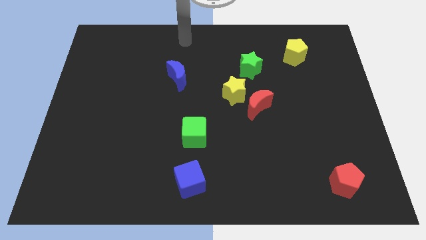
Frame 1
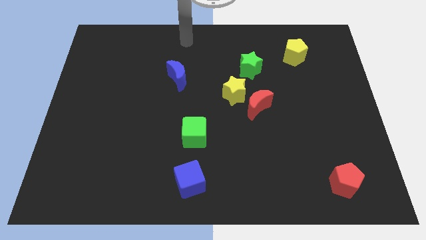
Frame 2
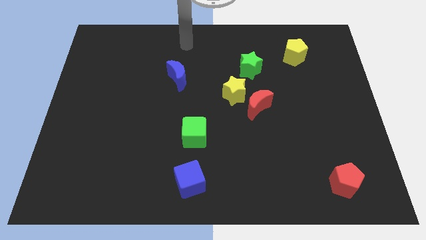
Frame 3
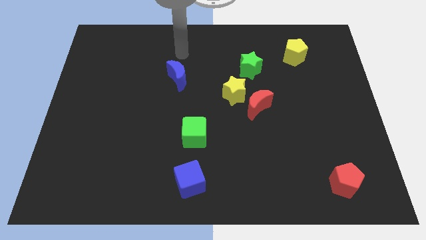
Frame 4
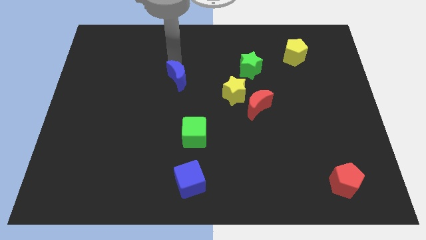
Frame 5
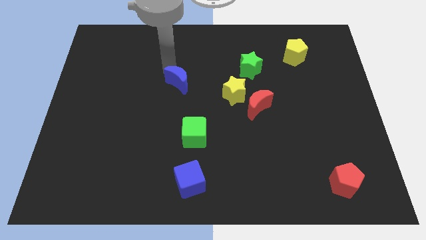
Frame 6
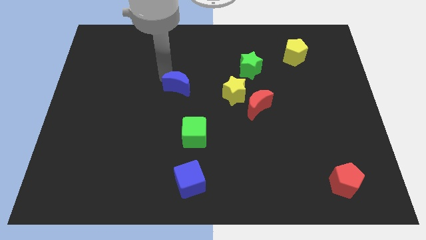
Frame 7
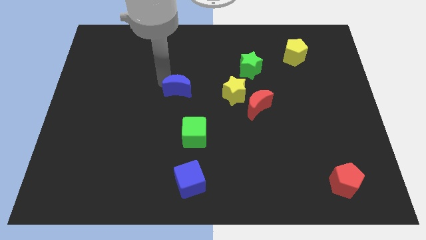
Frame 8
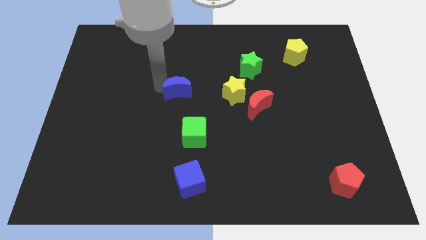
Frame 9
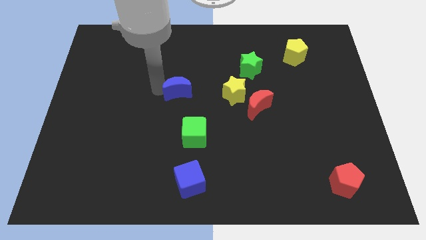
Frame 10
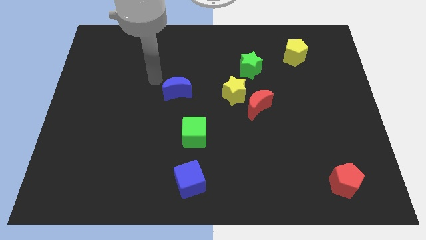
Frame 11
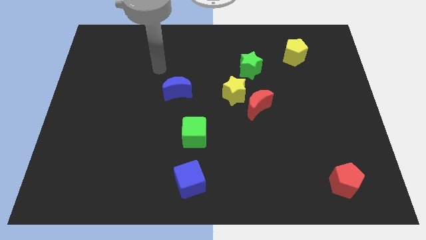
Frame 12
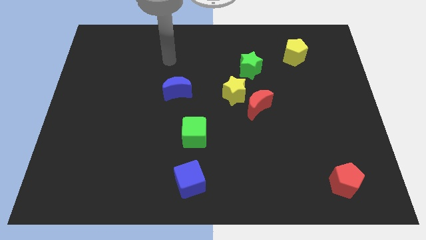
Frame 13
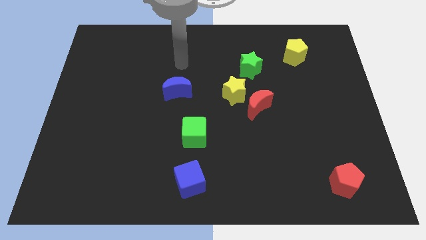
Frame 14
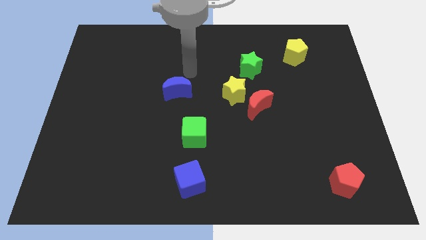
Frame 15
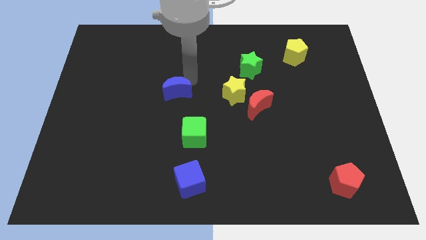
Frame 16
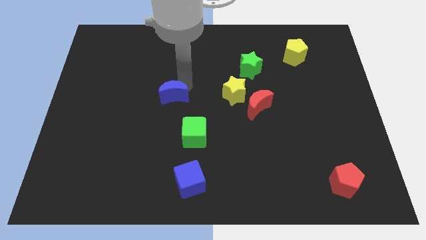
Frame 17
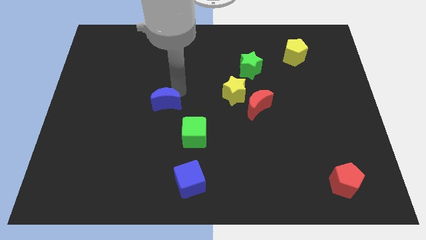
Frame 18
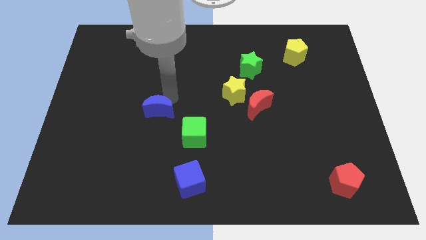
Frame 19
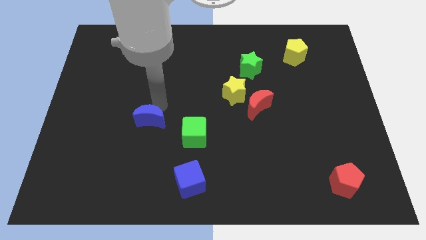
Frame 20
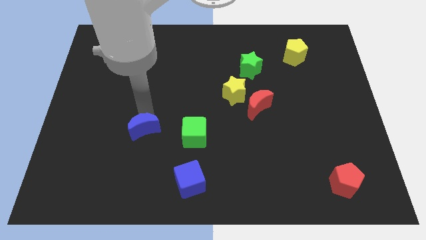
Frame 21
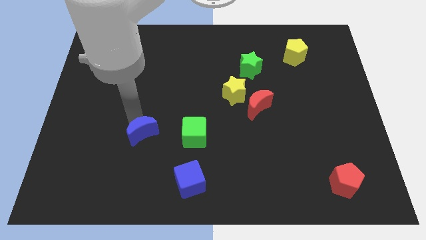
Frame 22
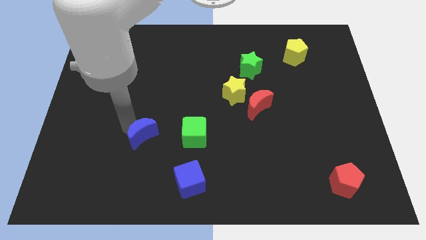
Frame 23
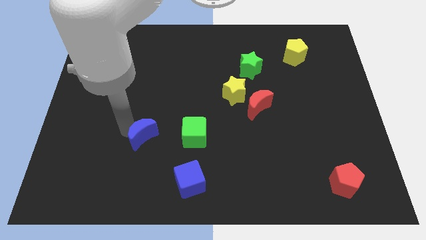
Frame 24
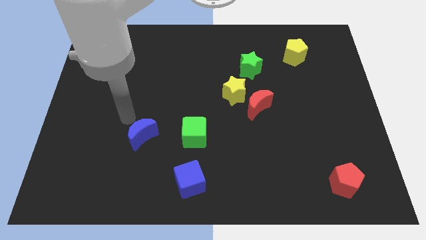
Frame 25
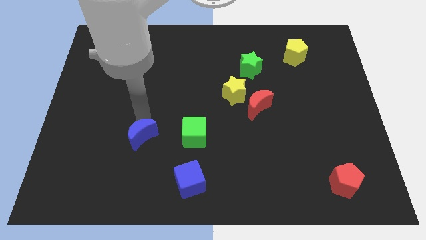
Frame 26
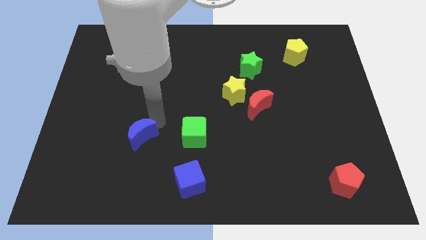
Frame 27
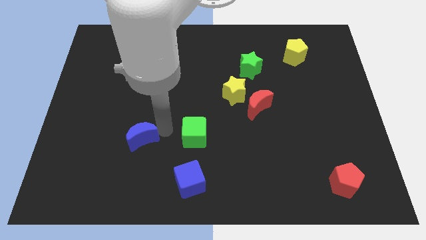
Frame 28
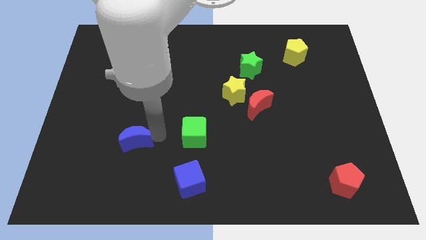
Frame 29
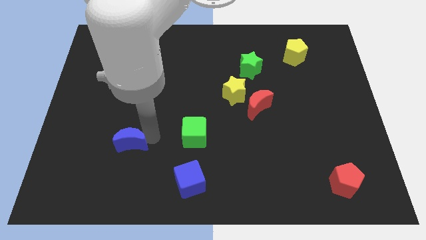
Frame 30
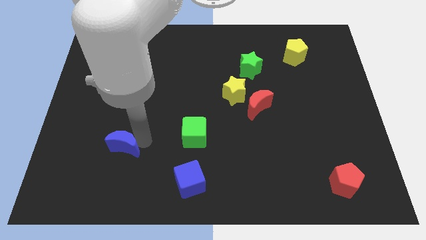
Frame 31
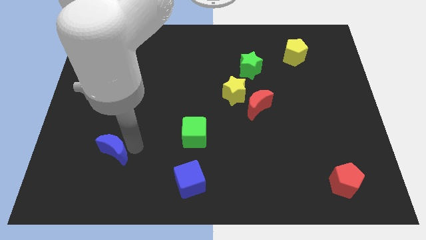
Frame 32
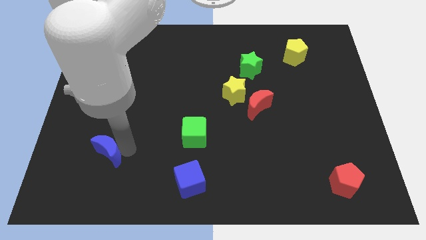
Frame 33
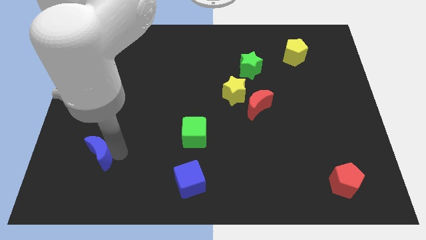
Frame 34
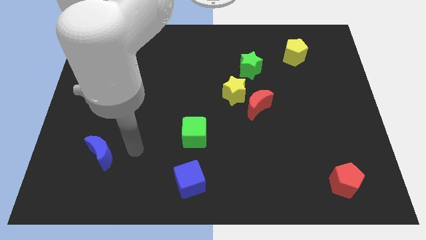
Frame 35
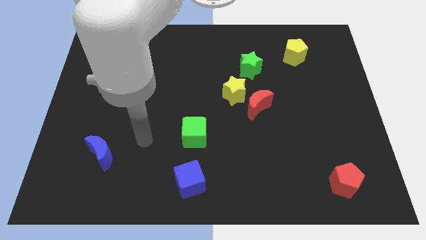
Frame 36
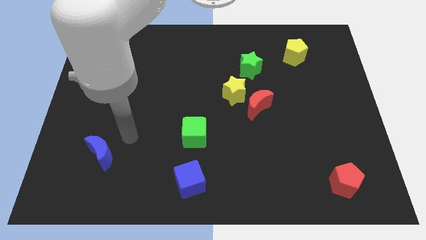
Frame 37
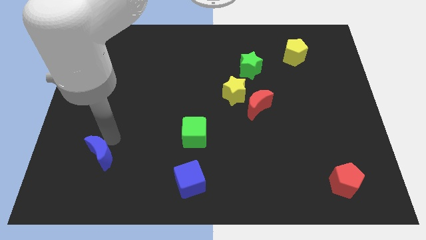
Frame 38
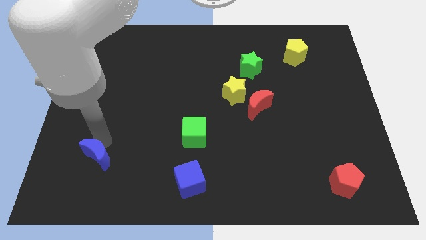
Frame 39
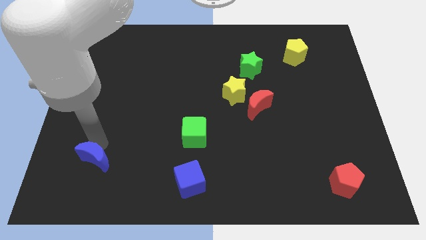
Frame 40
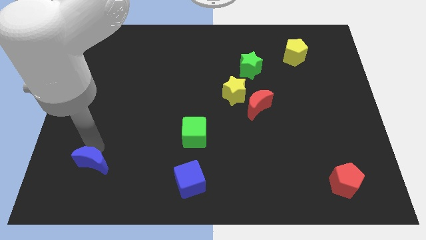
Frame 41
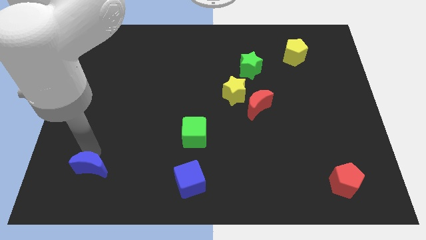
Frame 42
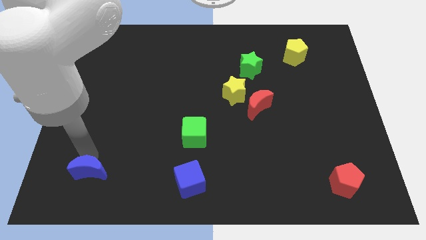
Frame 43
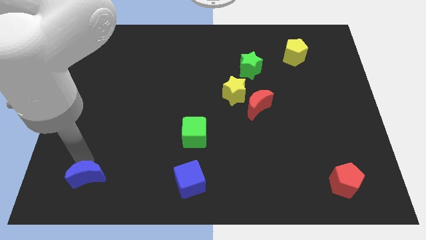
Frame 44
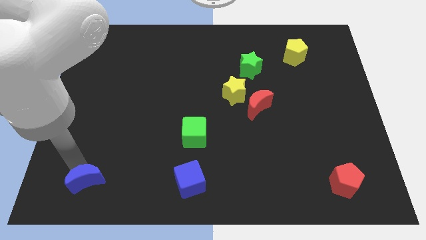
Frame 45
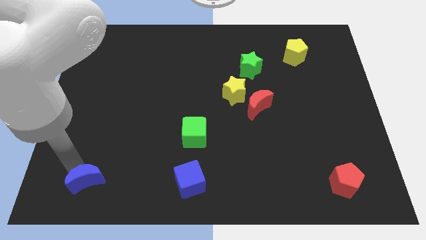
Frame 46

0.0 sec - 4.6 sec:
move the blue crescent to the left of the blue cube

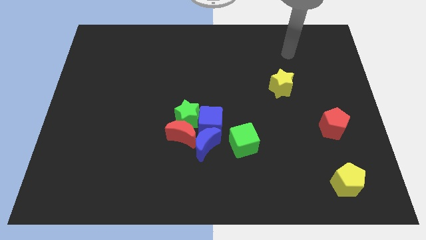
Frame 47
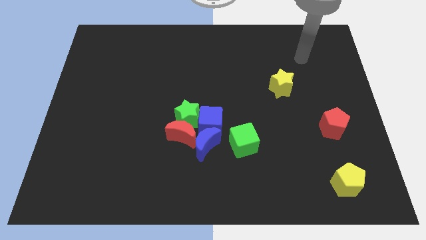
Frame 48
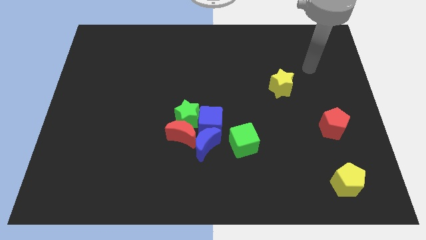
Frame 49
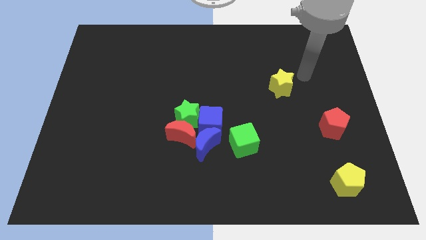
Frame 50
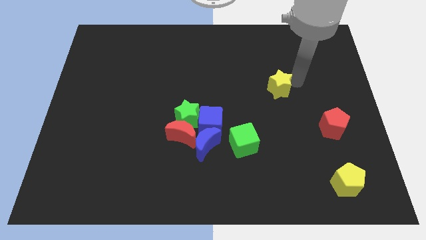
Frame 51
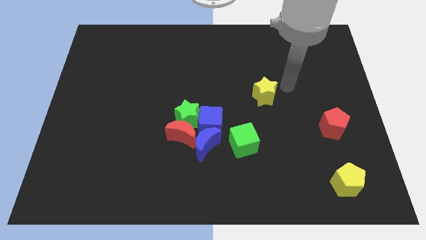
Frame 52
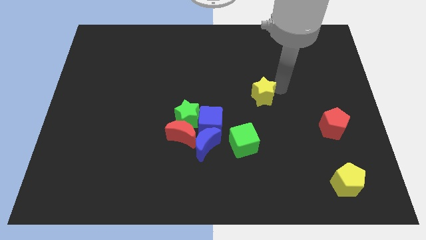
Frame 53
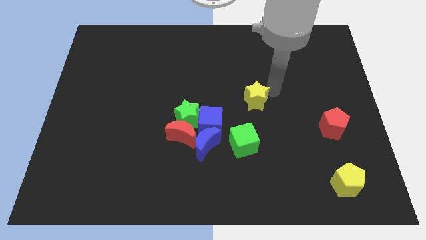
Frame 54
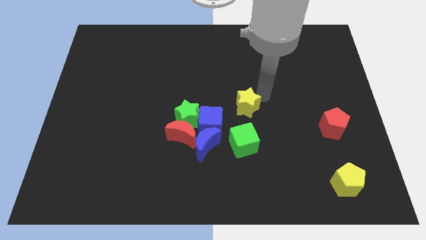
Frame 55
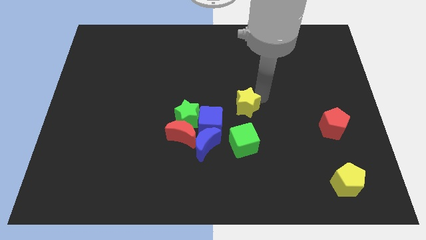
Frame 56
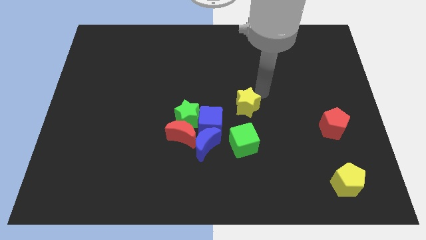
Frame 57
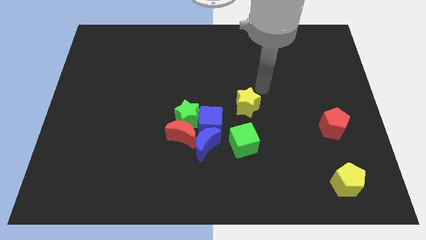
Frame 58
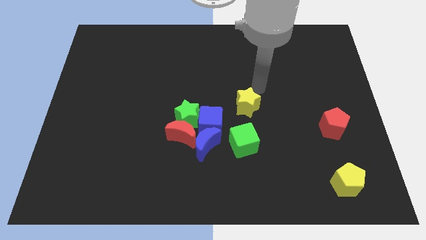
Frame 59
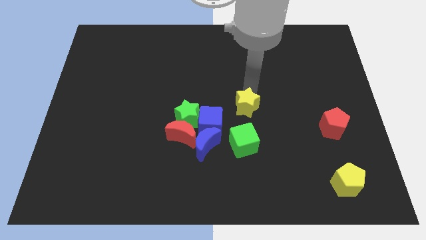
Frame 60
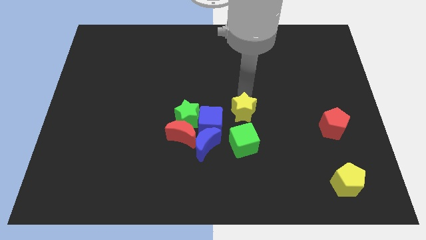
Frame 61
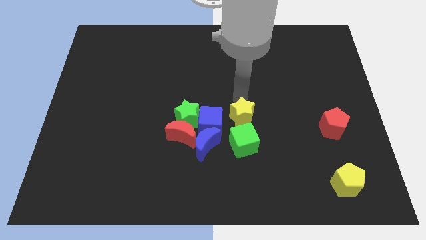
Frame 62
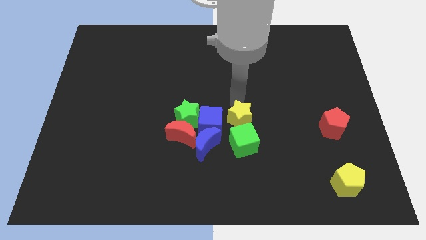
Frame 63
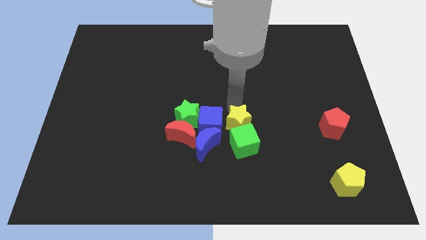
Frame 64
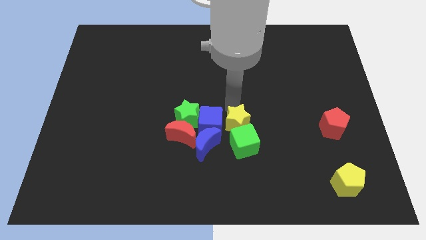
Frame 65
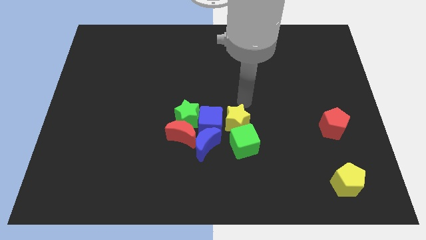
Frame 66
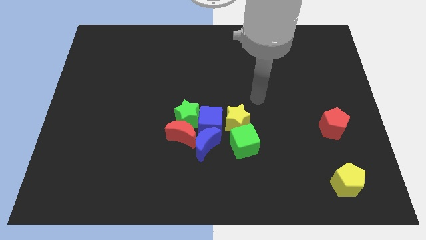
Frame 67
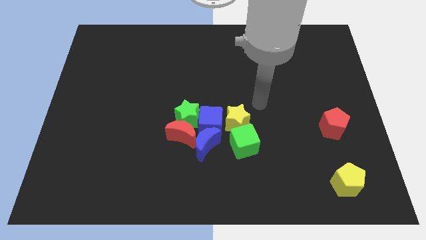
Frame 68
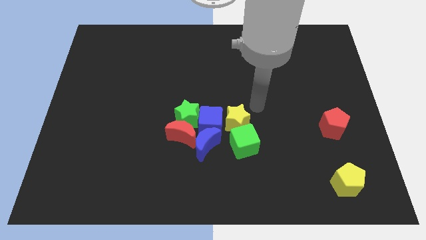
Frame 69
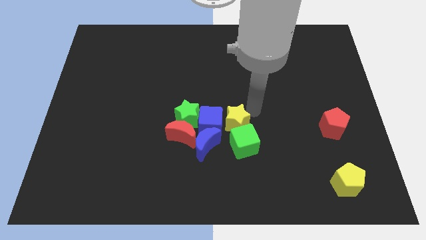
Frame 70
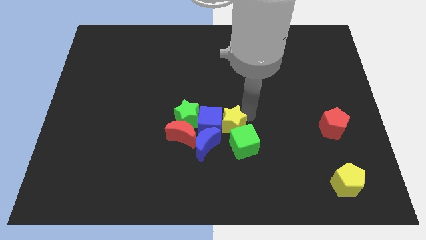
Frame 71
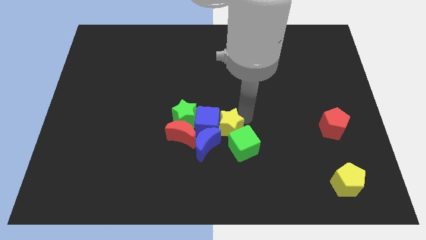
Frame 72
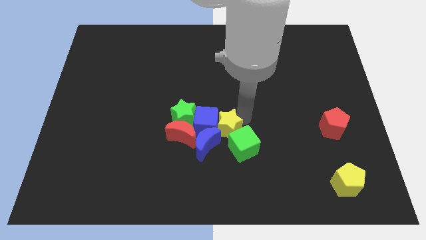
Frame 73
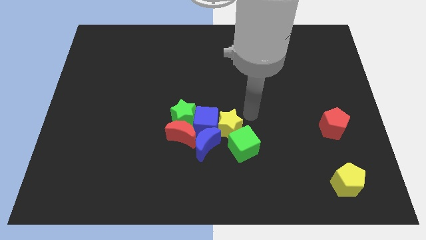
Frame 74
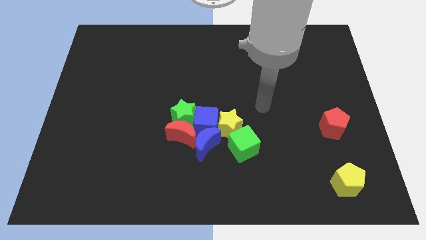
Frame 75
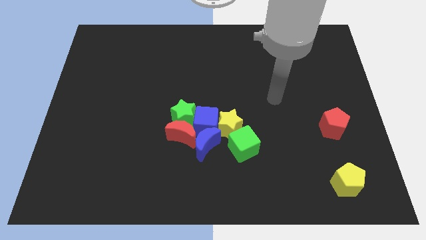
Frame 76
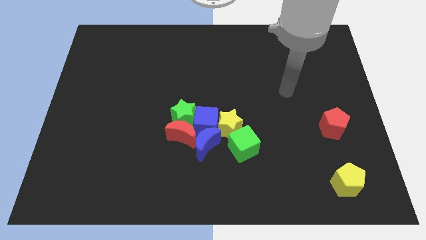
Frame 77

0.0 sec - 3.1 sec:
push the yellow star down into green cube

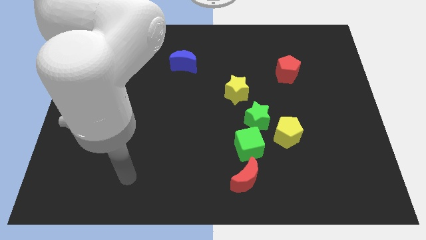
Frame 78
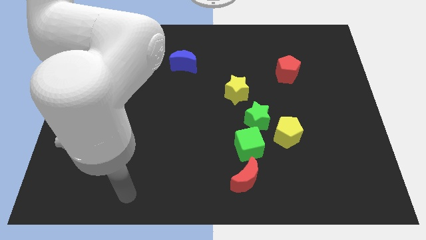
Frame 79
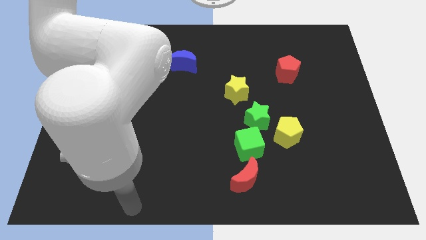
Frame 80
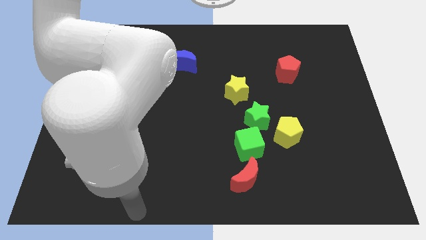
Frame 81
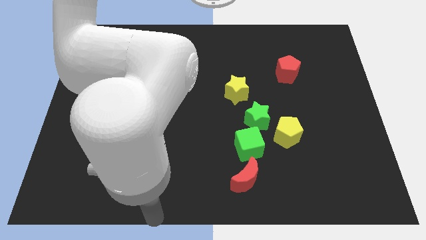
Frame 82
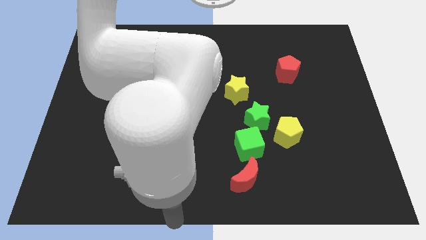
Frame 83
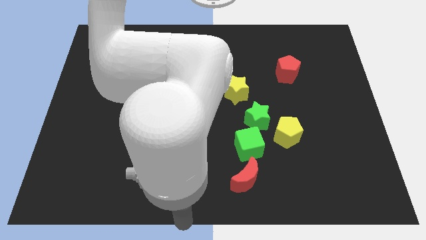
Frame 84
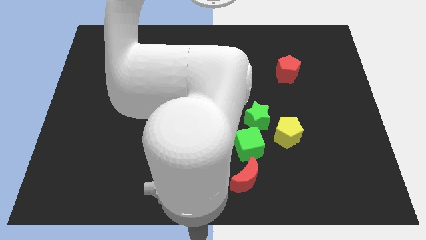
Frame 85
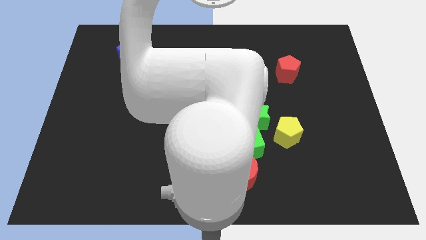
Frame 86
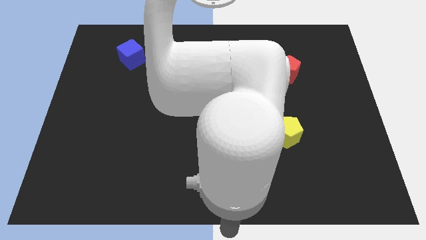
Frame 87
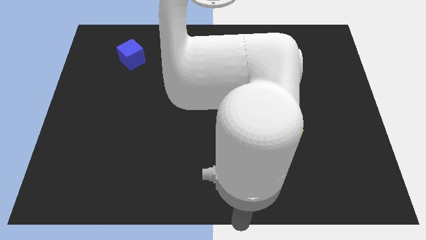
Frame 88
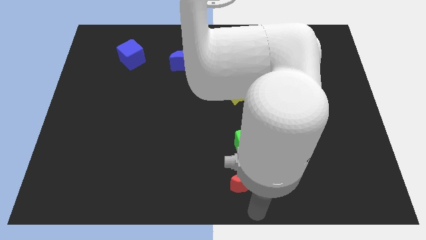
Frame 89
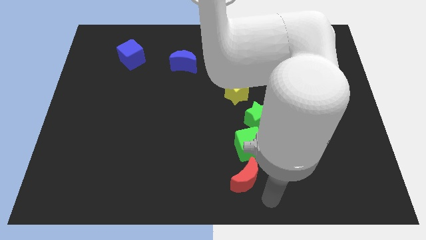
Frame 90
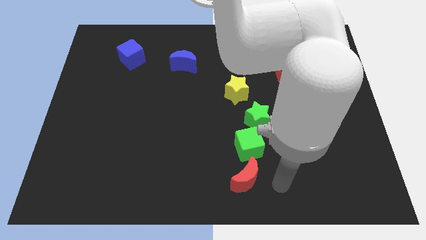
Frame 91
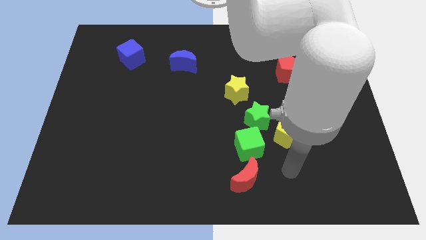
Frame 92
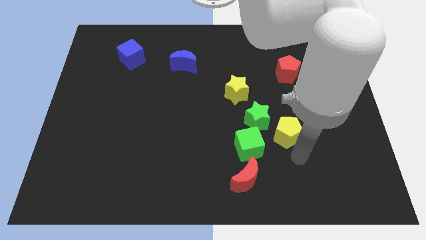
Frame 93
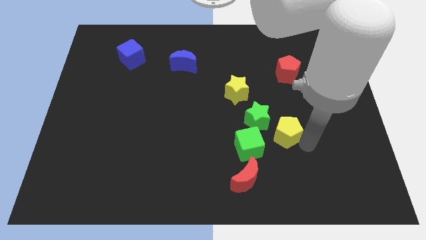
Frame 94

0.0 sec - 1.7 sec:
go near yellow pentagon
